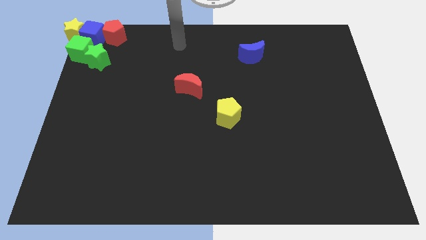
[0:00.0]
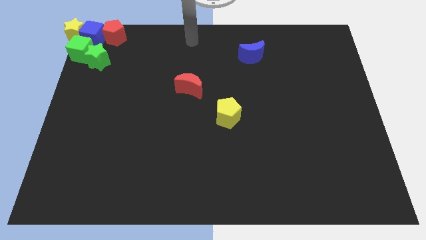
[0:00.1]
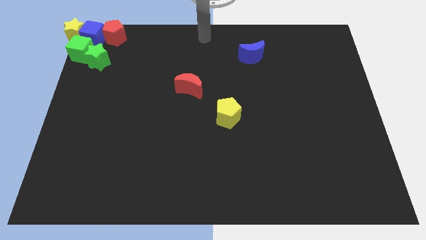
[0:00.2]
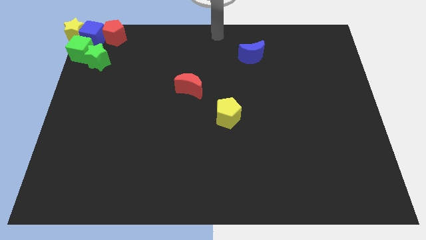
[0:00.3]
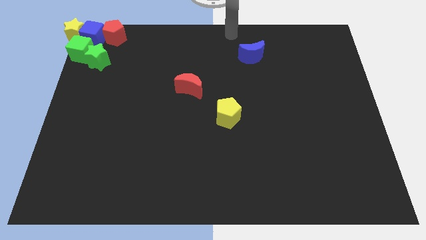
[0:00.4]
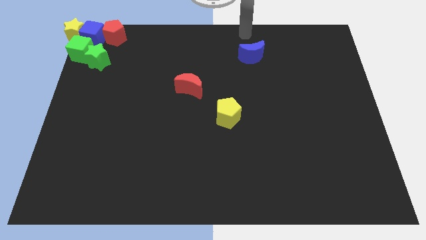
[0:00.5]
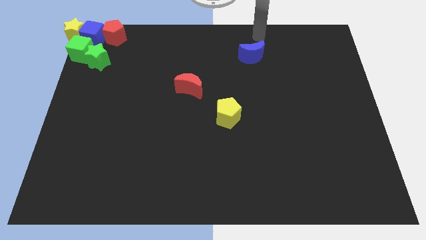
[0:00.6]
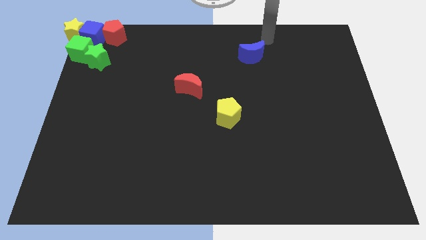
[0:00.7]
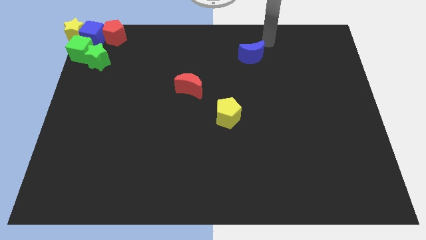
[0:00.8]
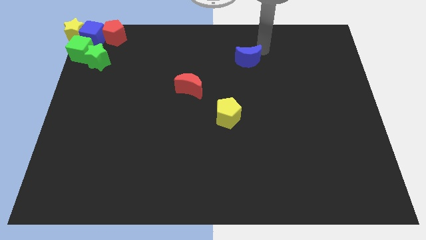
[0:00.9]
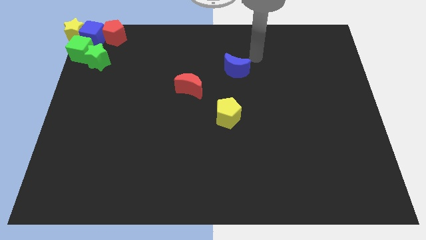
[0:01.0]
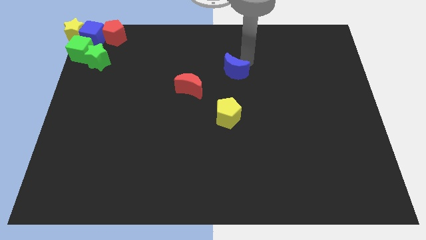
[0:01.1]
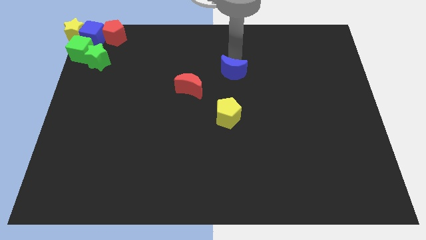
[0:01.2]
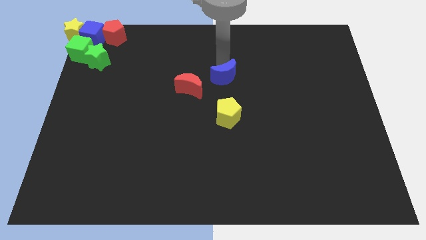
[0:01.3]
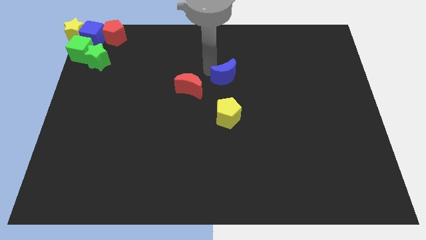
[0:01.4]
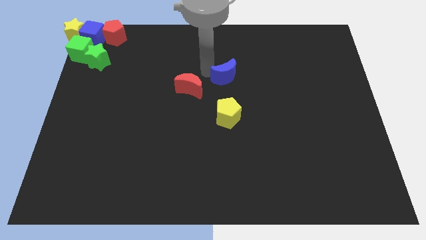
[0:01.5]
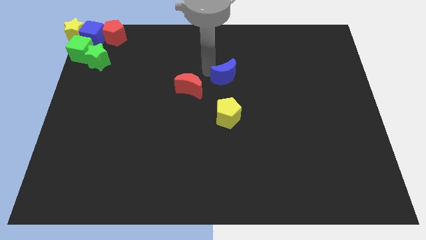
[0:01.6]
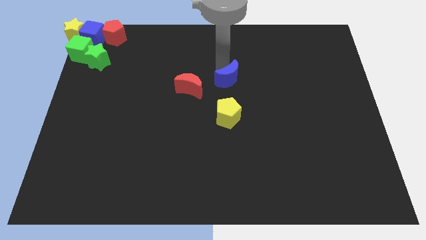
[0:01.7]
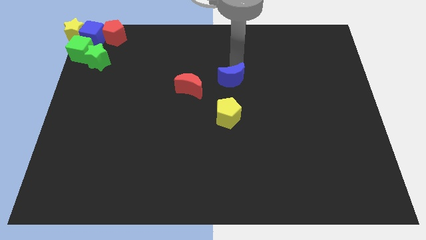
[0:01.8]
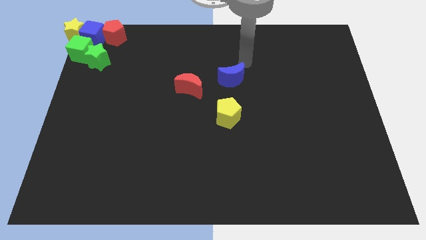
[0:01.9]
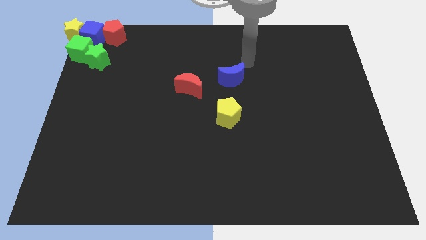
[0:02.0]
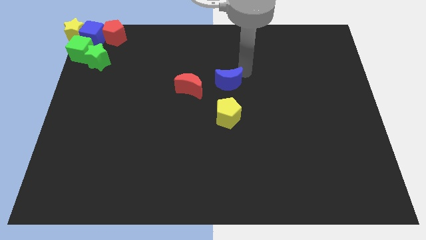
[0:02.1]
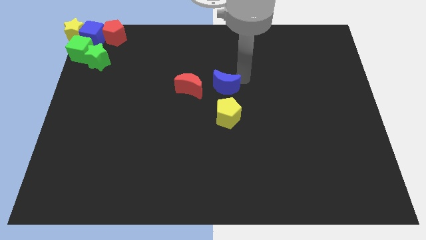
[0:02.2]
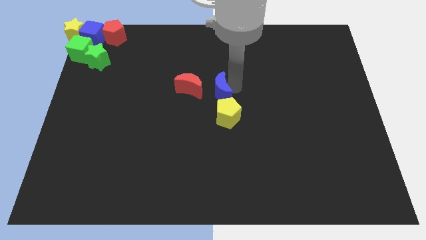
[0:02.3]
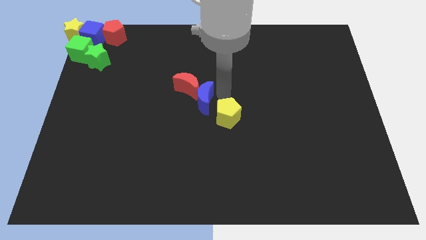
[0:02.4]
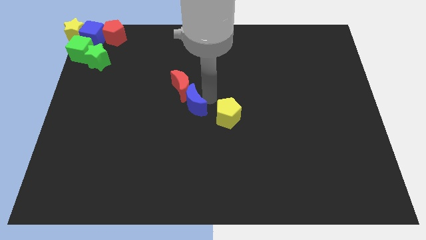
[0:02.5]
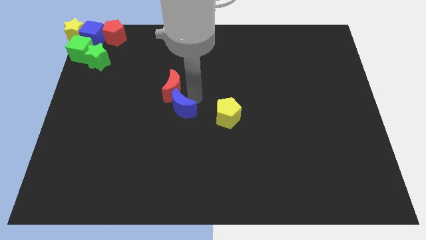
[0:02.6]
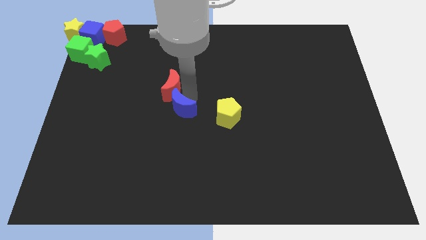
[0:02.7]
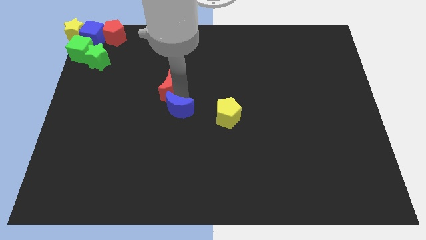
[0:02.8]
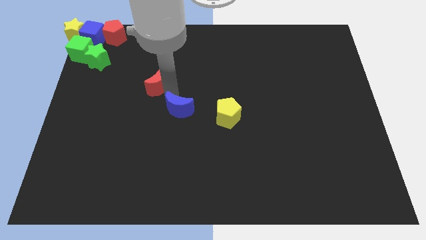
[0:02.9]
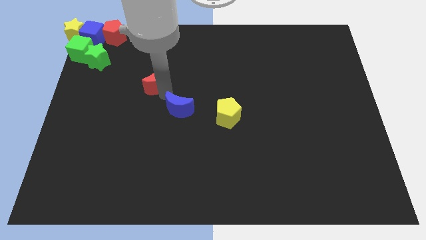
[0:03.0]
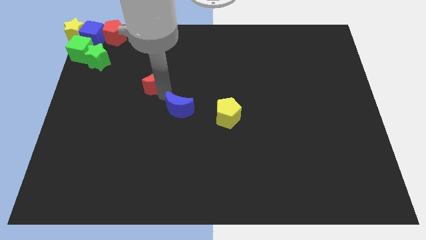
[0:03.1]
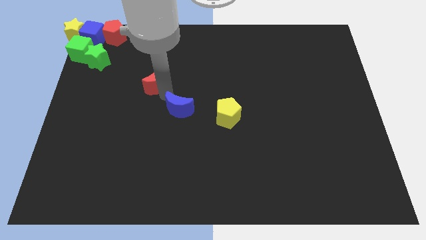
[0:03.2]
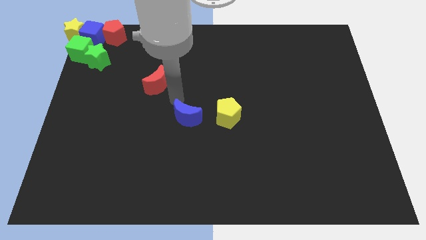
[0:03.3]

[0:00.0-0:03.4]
place blue crescent to the center of the board

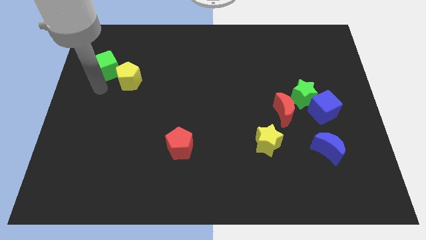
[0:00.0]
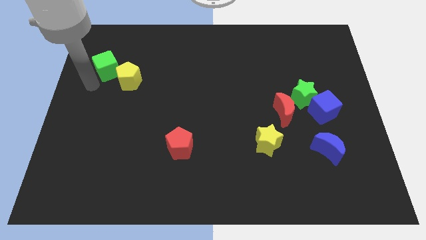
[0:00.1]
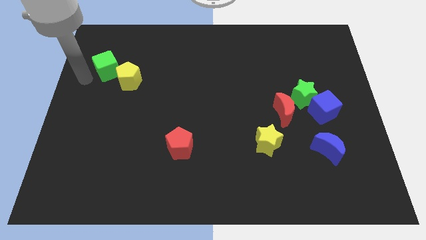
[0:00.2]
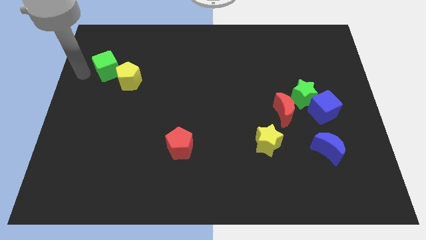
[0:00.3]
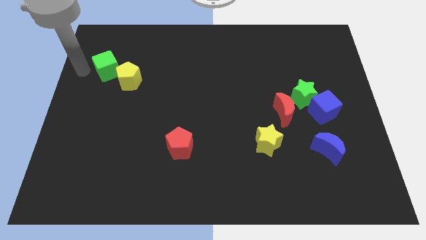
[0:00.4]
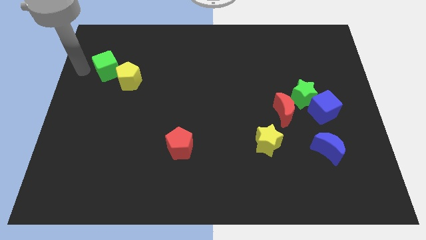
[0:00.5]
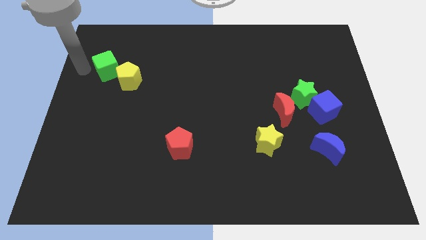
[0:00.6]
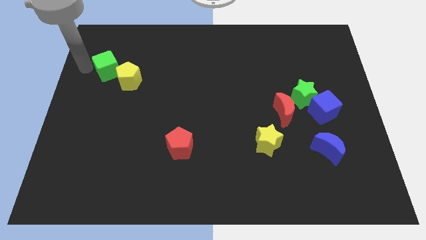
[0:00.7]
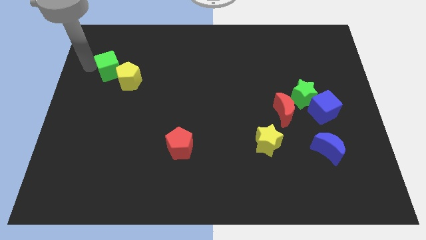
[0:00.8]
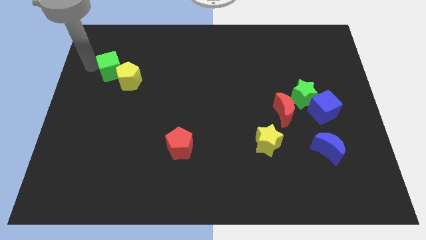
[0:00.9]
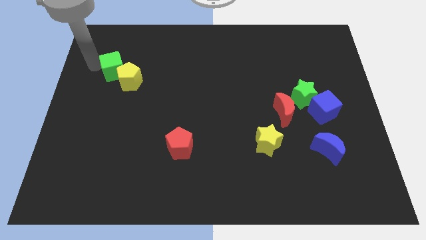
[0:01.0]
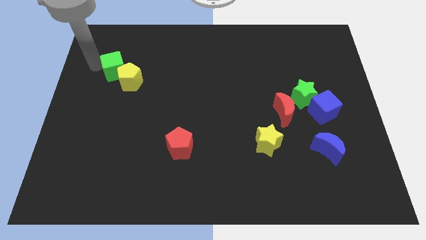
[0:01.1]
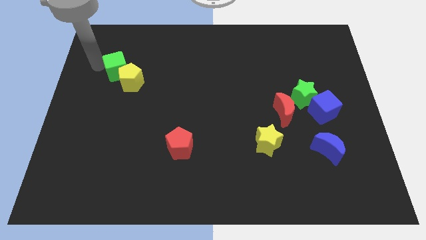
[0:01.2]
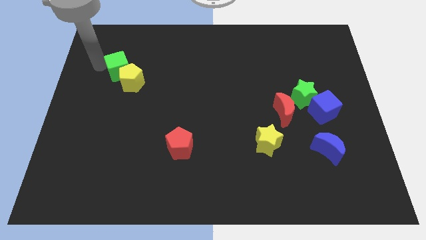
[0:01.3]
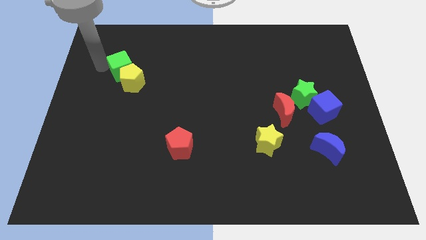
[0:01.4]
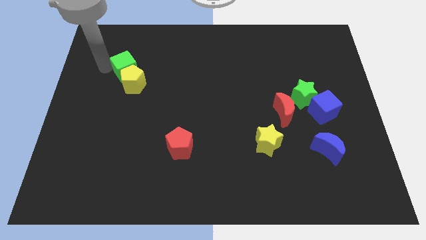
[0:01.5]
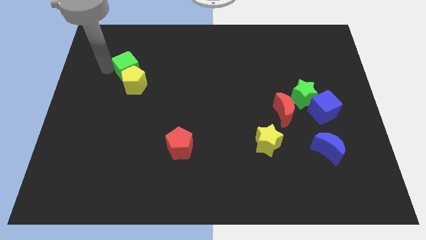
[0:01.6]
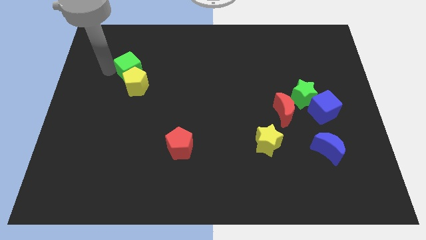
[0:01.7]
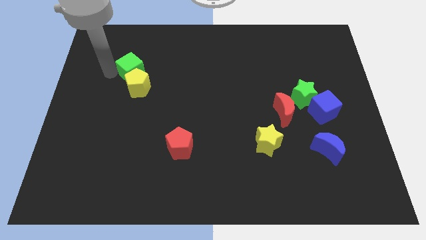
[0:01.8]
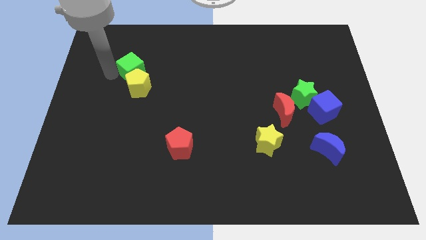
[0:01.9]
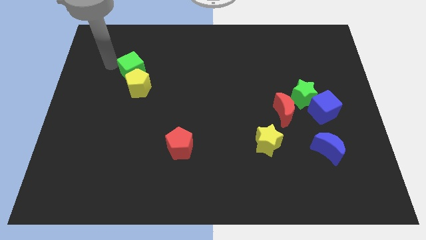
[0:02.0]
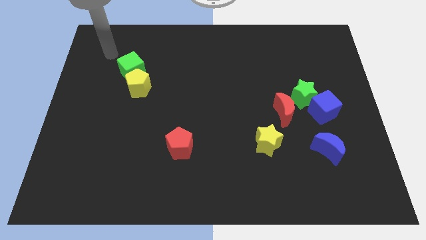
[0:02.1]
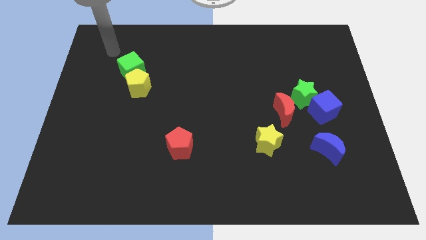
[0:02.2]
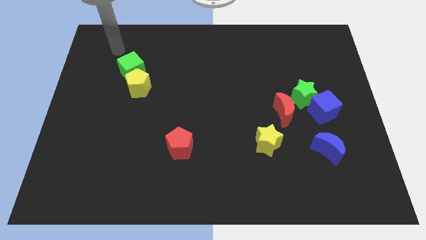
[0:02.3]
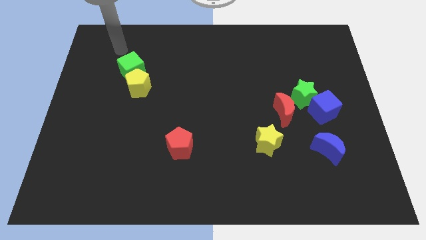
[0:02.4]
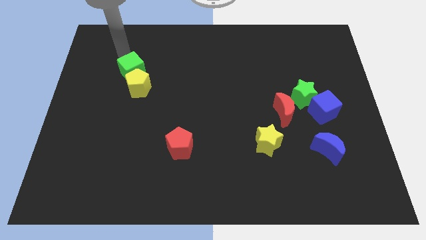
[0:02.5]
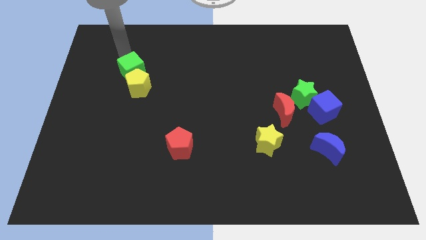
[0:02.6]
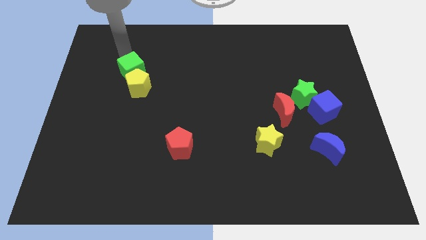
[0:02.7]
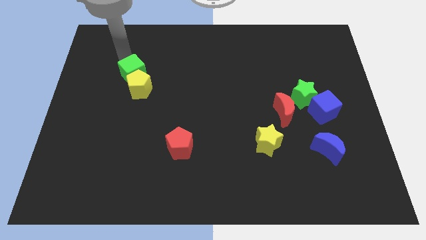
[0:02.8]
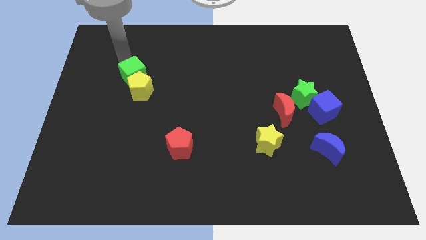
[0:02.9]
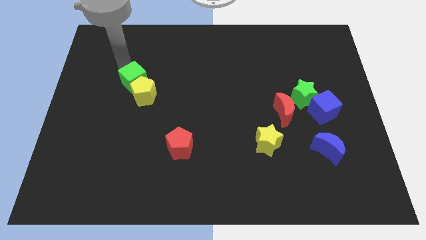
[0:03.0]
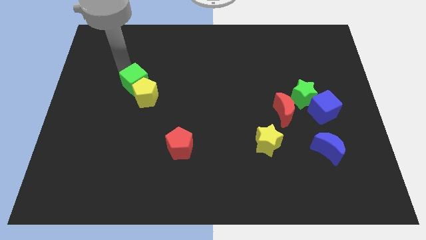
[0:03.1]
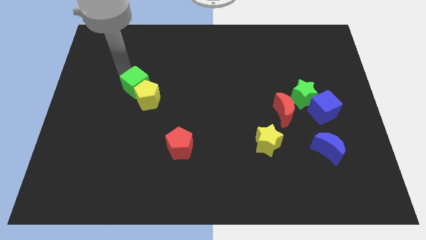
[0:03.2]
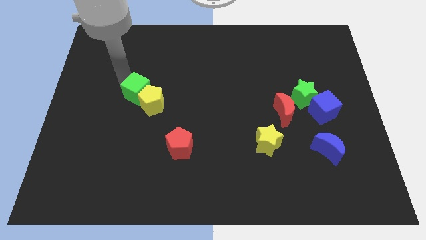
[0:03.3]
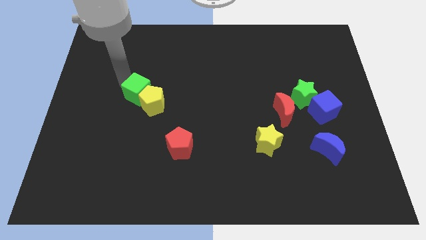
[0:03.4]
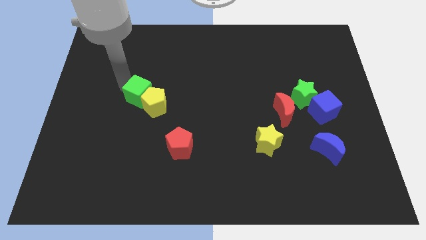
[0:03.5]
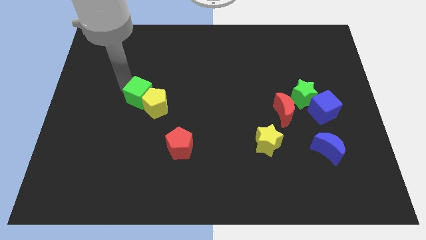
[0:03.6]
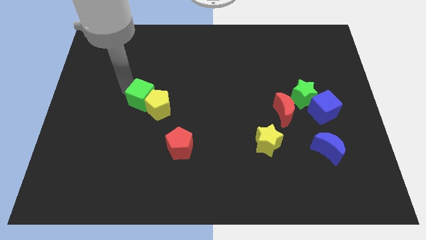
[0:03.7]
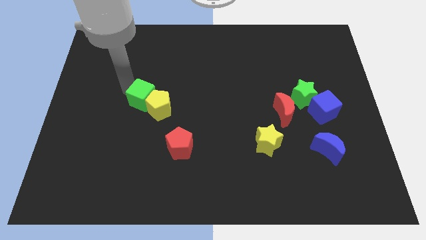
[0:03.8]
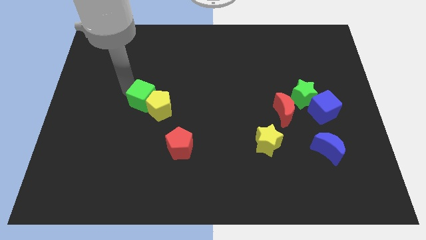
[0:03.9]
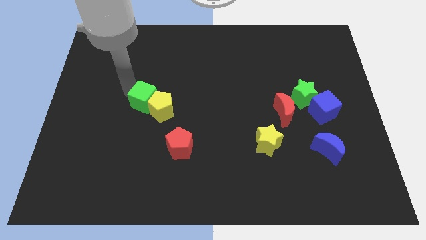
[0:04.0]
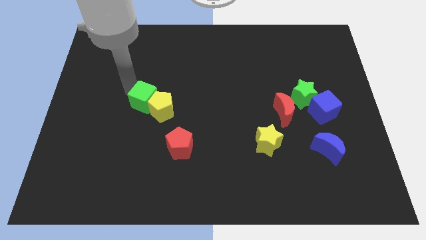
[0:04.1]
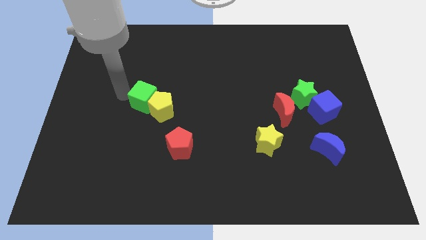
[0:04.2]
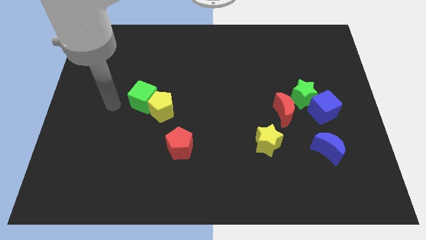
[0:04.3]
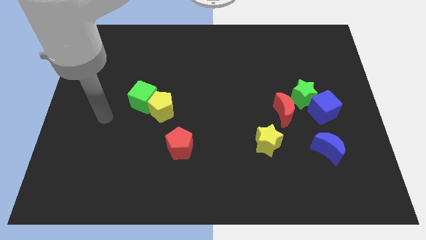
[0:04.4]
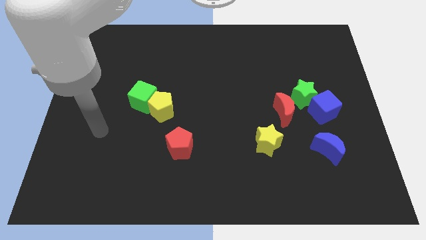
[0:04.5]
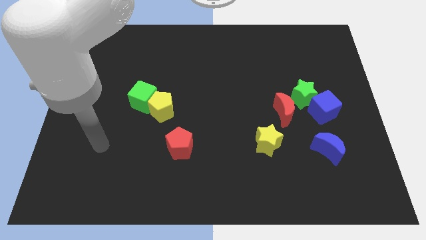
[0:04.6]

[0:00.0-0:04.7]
place the green cube and yellow pentagon to the left of the red crescent

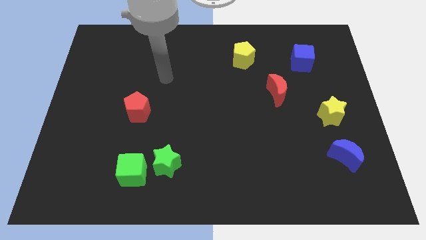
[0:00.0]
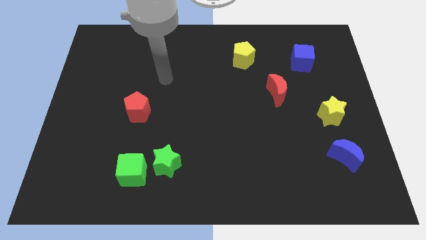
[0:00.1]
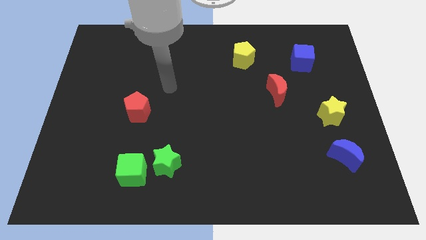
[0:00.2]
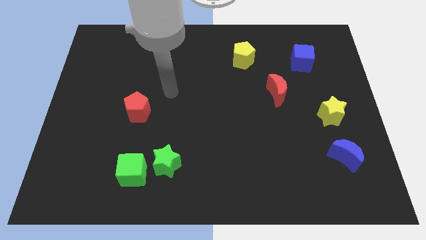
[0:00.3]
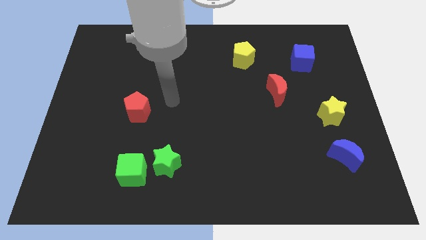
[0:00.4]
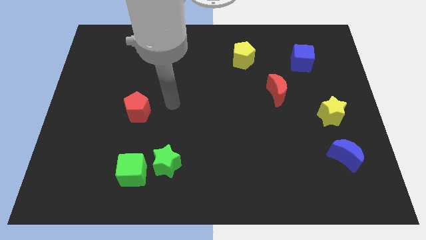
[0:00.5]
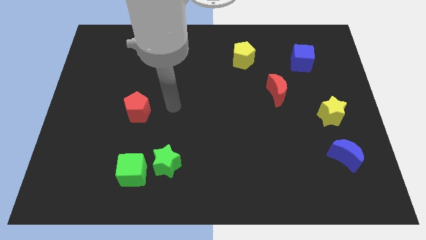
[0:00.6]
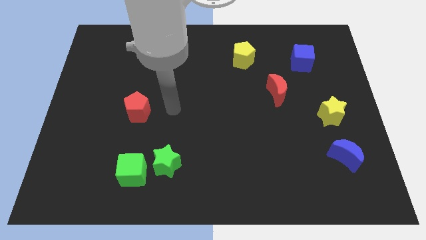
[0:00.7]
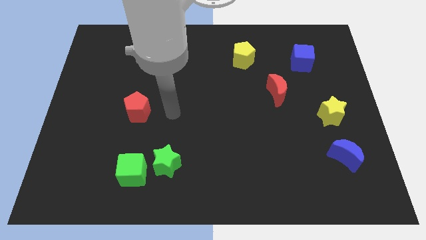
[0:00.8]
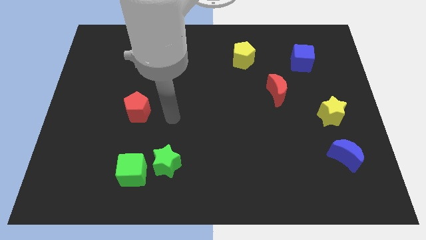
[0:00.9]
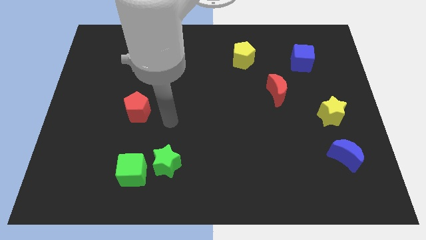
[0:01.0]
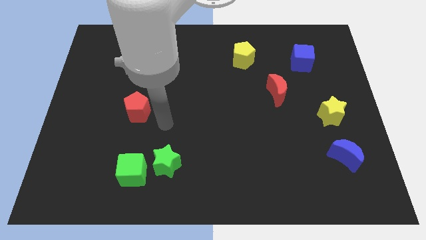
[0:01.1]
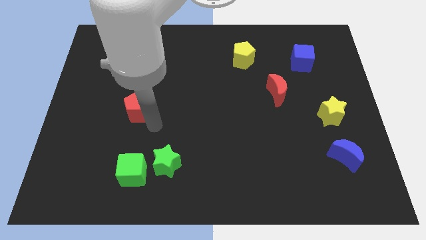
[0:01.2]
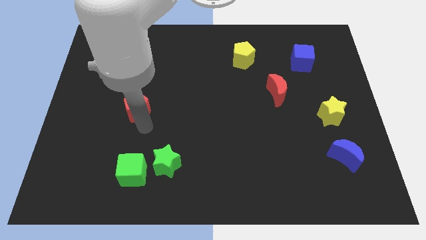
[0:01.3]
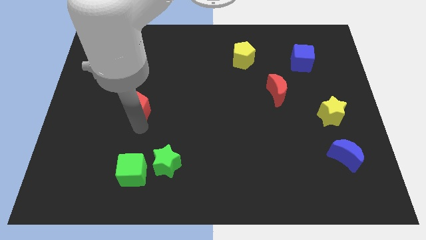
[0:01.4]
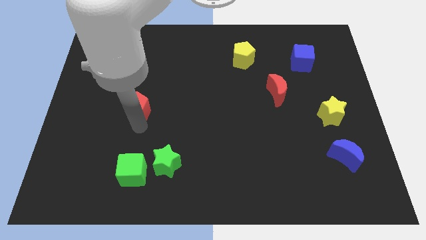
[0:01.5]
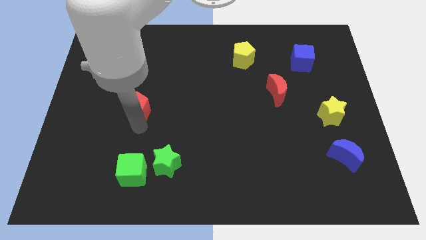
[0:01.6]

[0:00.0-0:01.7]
move the arm to the bottom of the red pentagon
